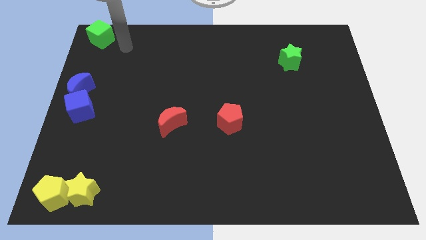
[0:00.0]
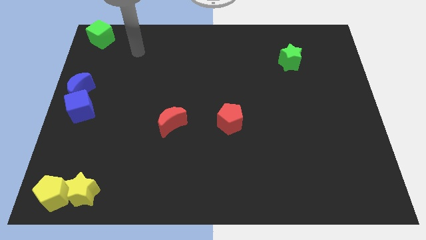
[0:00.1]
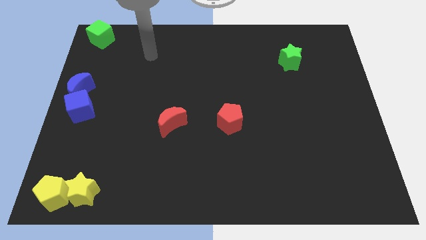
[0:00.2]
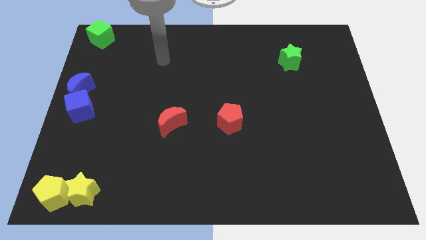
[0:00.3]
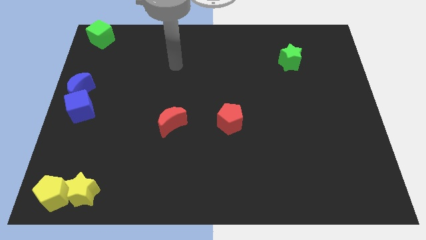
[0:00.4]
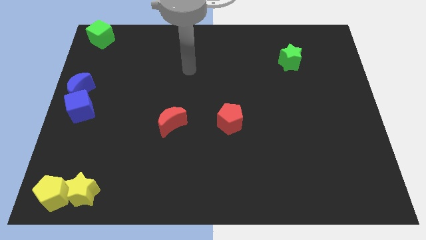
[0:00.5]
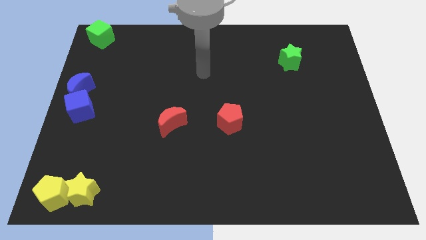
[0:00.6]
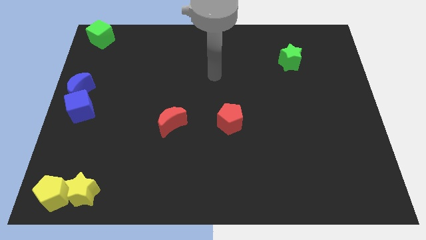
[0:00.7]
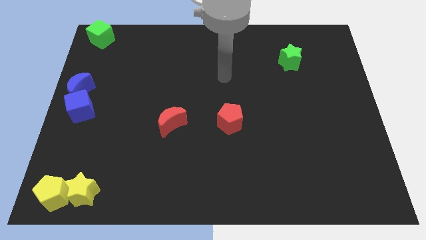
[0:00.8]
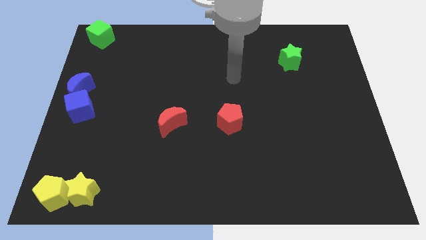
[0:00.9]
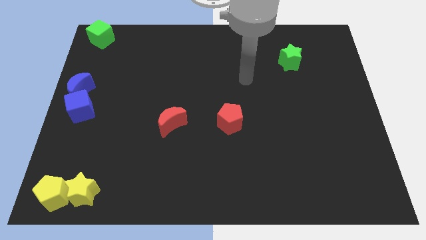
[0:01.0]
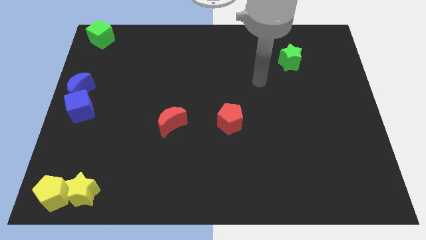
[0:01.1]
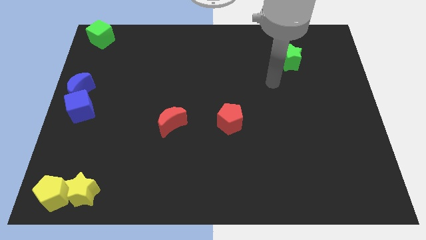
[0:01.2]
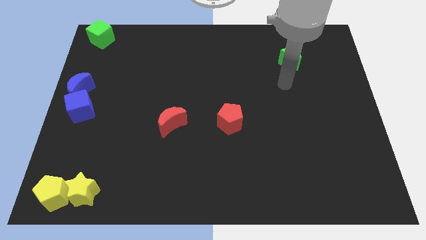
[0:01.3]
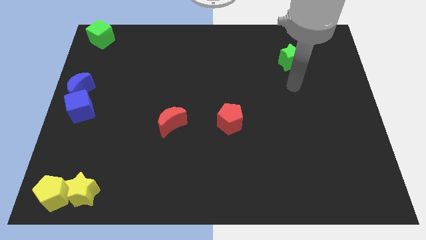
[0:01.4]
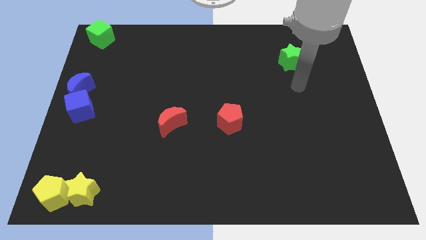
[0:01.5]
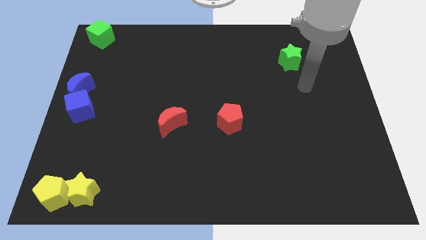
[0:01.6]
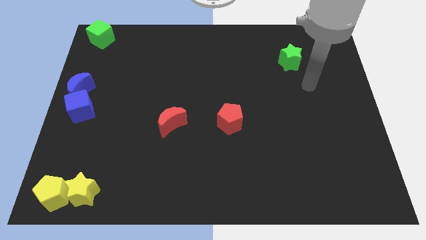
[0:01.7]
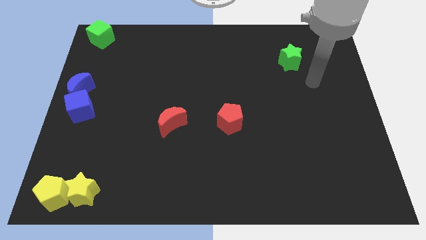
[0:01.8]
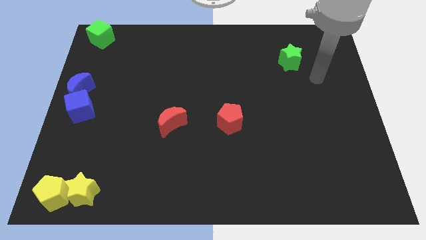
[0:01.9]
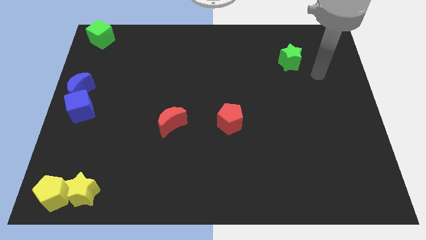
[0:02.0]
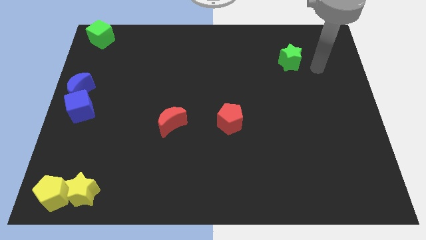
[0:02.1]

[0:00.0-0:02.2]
move the arm to the right of green star

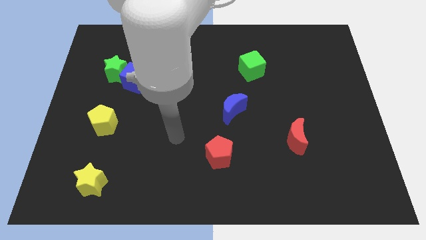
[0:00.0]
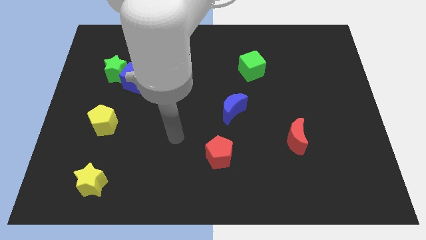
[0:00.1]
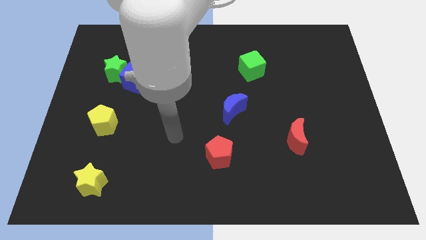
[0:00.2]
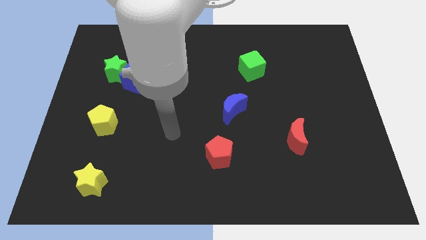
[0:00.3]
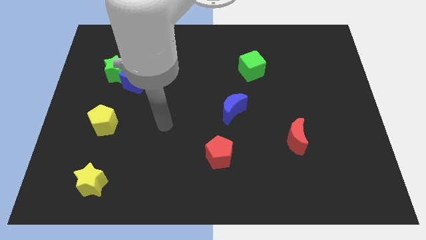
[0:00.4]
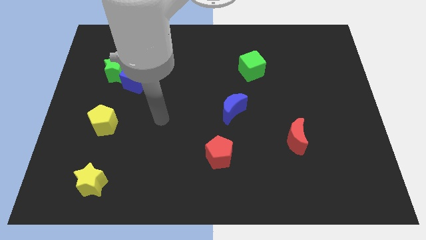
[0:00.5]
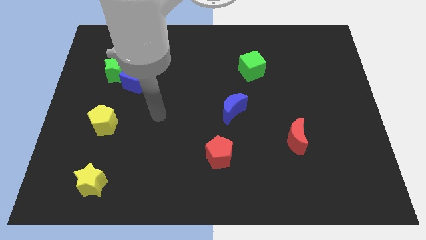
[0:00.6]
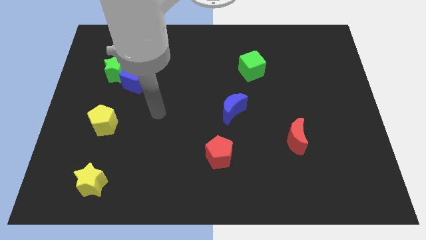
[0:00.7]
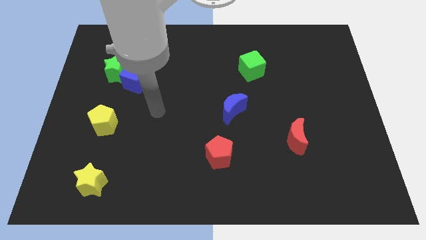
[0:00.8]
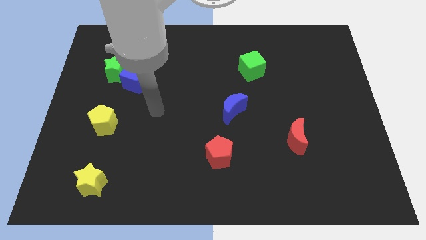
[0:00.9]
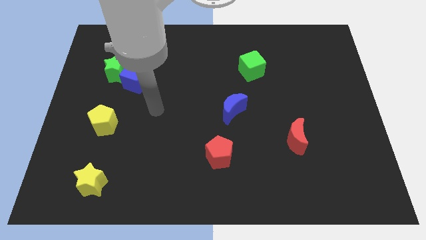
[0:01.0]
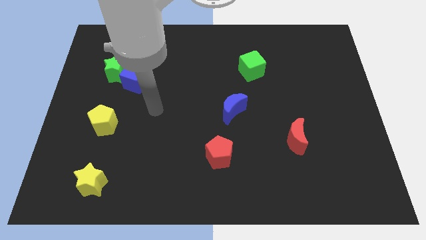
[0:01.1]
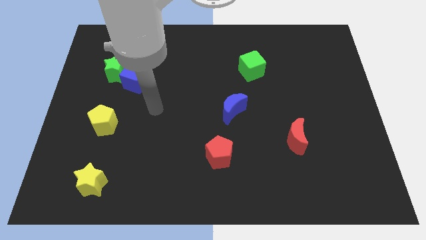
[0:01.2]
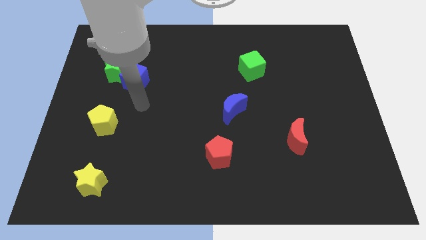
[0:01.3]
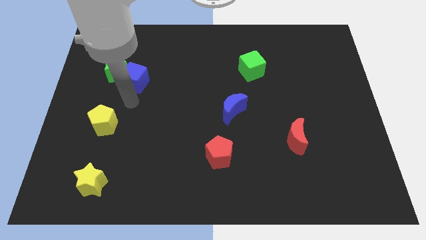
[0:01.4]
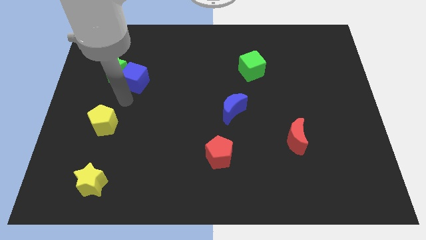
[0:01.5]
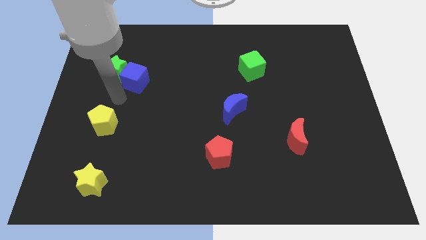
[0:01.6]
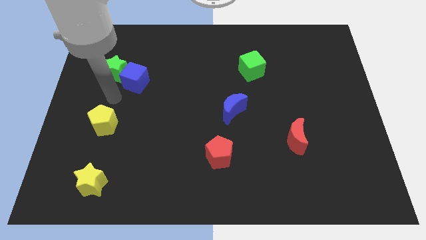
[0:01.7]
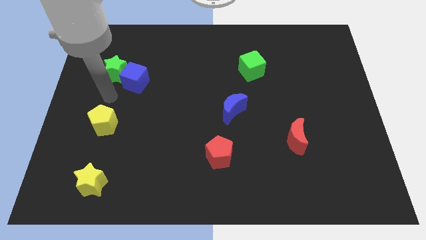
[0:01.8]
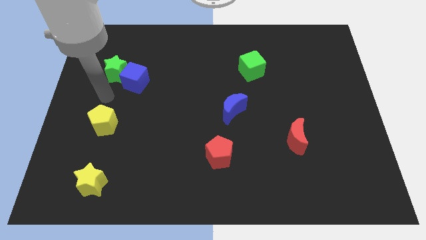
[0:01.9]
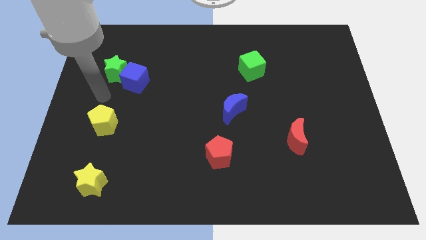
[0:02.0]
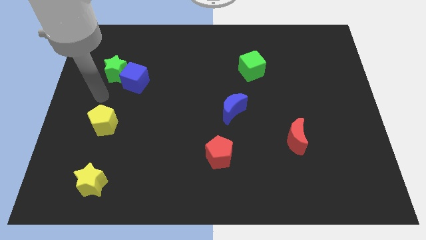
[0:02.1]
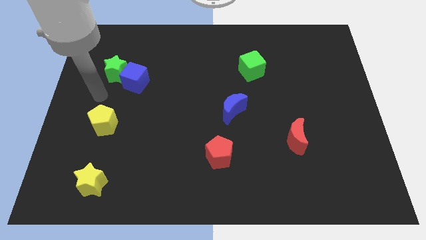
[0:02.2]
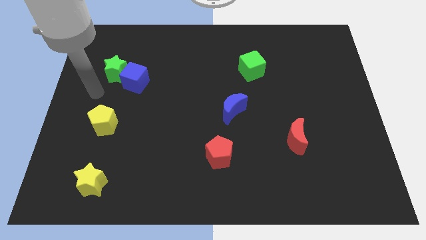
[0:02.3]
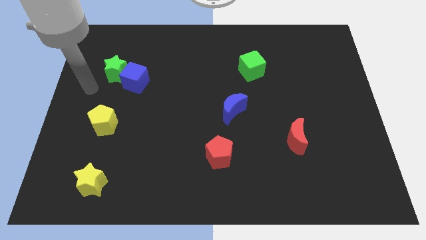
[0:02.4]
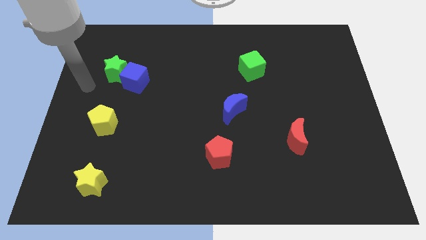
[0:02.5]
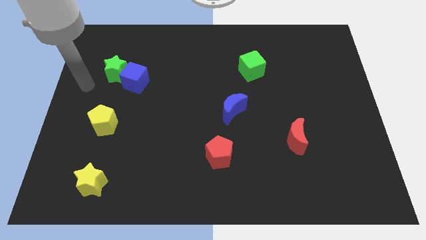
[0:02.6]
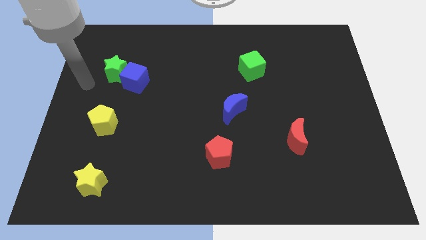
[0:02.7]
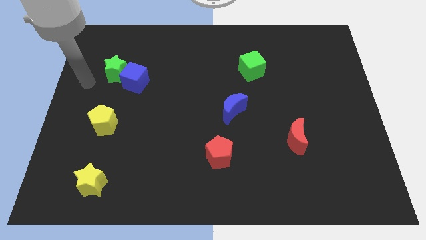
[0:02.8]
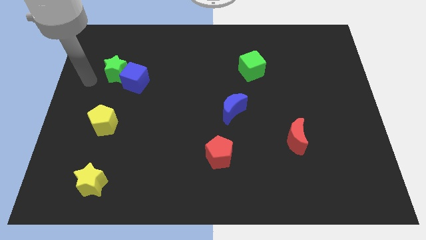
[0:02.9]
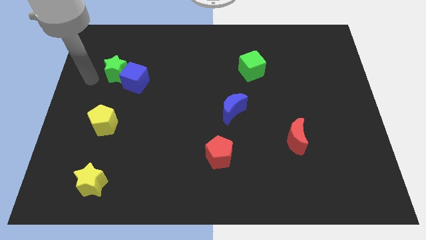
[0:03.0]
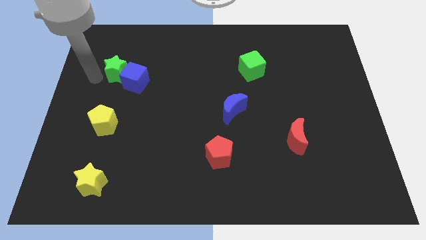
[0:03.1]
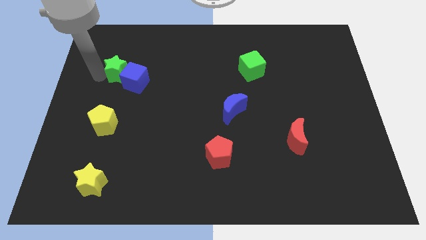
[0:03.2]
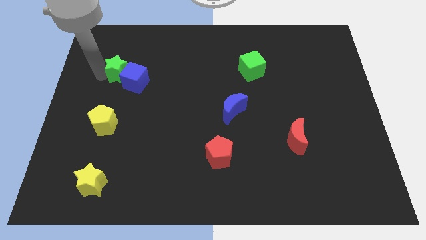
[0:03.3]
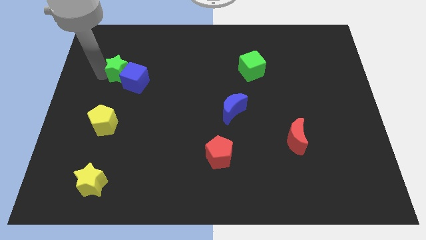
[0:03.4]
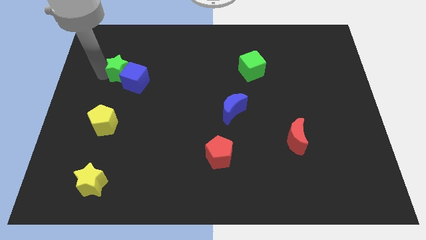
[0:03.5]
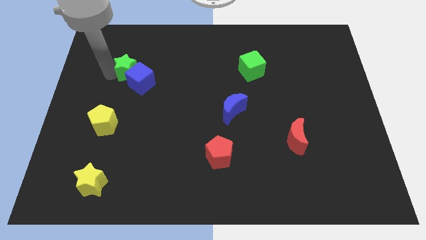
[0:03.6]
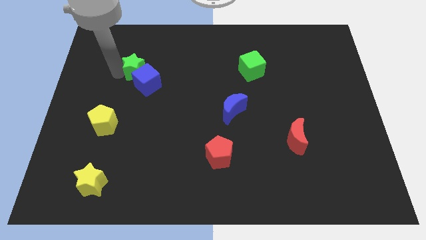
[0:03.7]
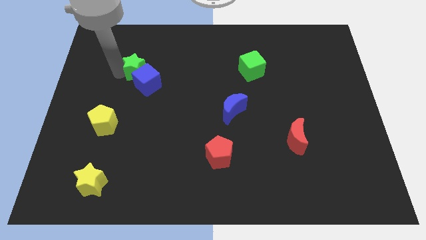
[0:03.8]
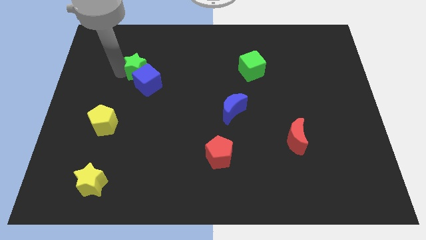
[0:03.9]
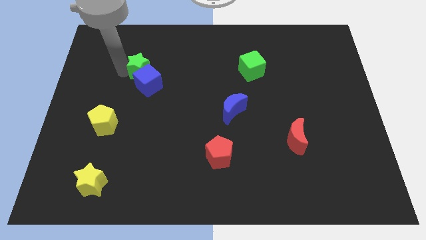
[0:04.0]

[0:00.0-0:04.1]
slide the blue cube towards the center of the board using green star

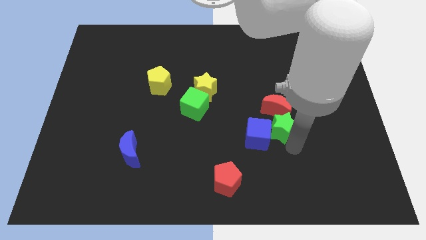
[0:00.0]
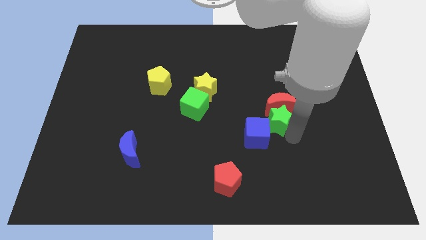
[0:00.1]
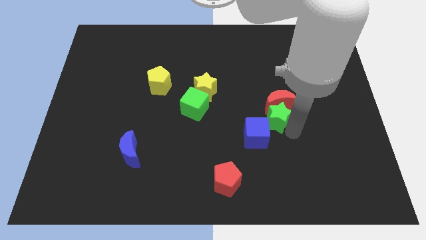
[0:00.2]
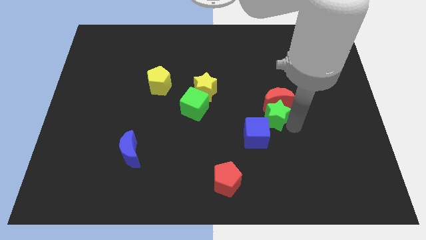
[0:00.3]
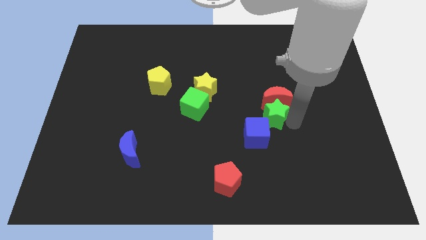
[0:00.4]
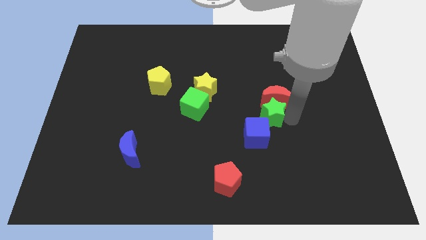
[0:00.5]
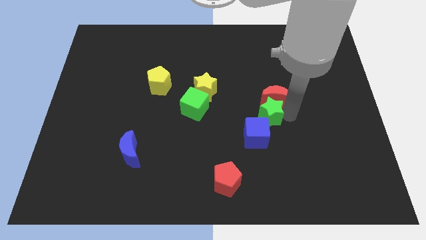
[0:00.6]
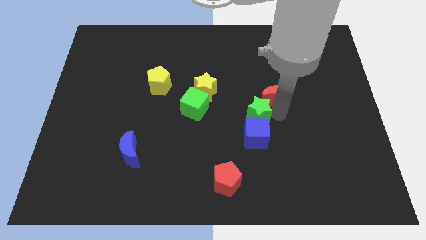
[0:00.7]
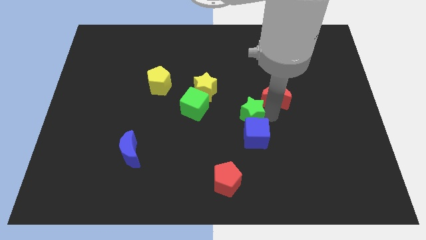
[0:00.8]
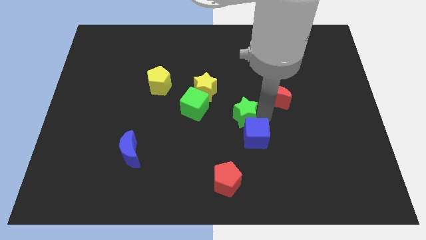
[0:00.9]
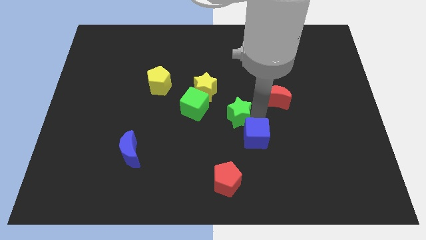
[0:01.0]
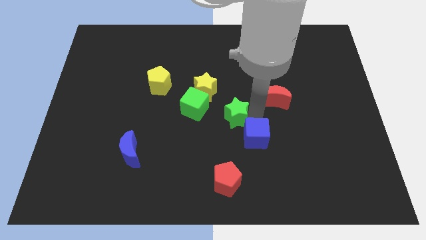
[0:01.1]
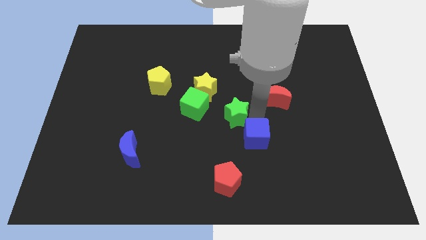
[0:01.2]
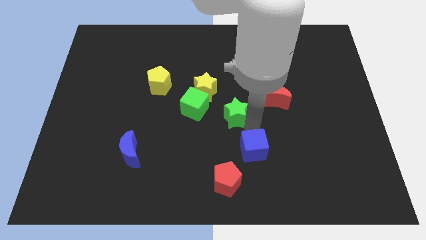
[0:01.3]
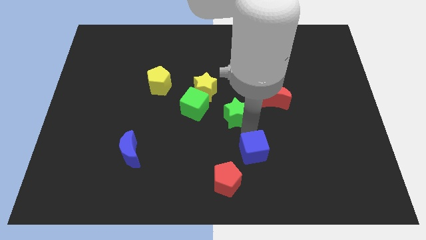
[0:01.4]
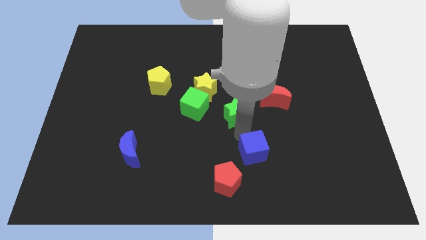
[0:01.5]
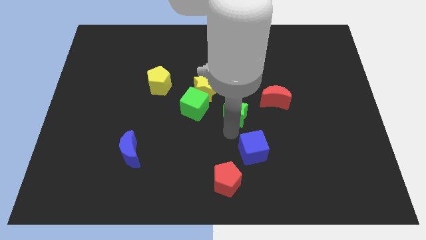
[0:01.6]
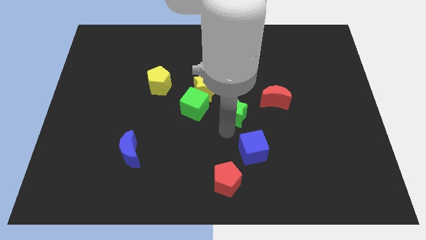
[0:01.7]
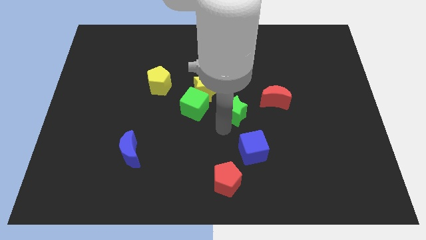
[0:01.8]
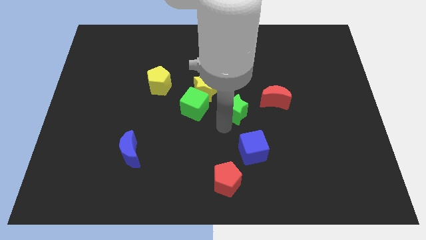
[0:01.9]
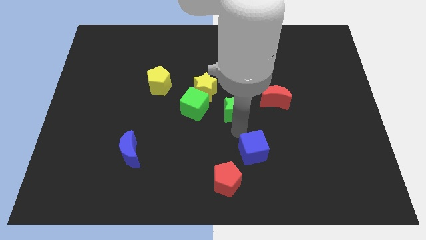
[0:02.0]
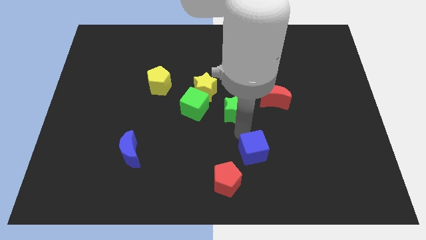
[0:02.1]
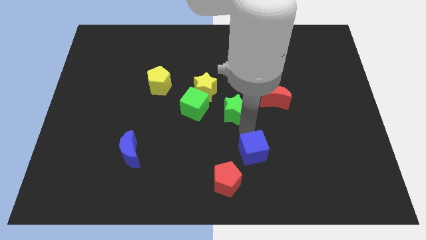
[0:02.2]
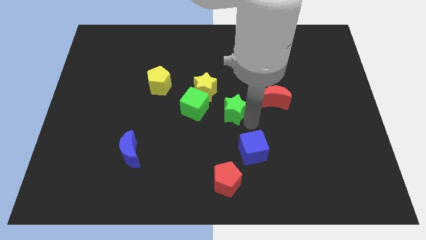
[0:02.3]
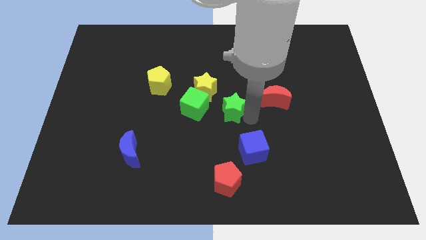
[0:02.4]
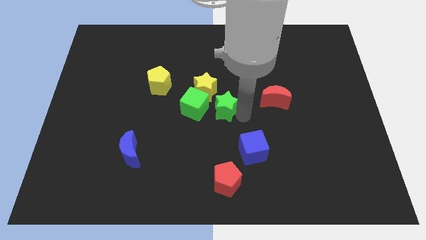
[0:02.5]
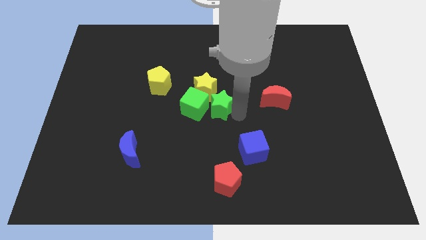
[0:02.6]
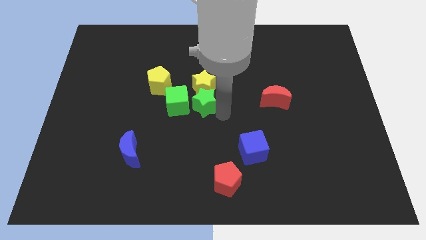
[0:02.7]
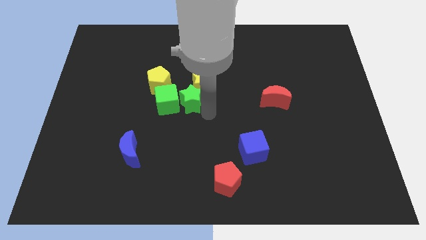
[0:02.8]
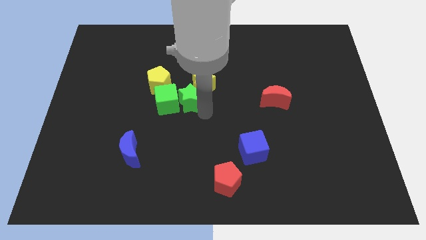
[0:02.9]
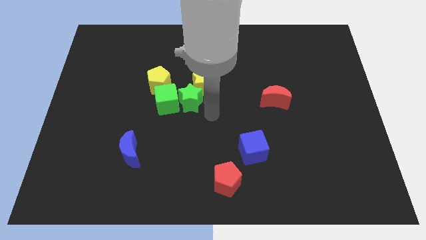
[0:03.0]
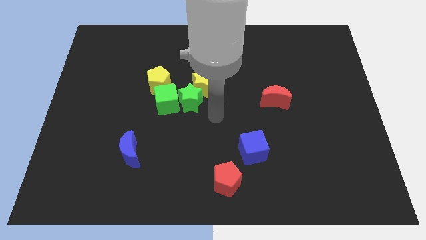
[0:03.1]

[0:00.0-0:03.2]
place green star to the center of the board
